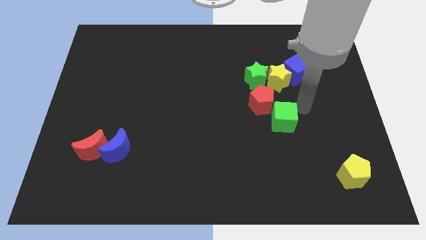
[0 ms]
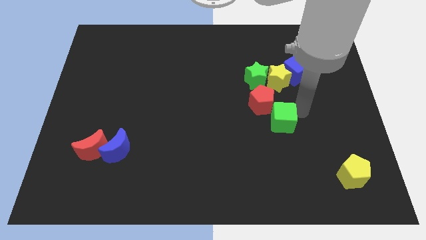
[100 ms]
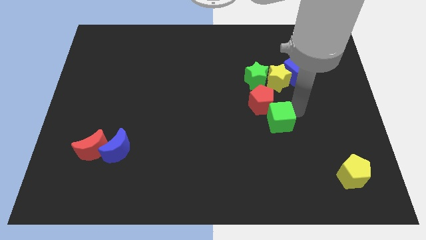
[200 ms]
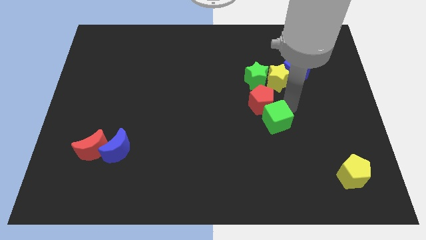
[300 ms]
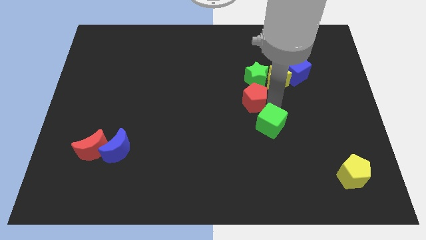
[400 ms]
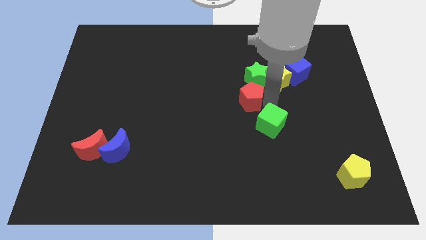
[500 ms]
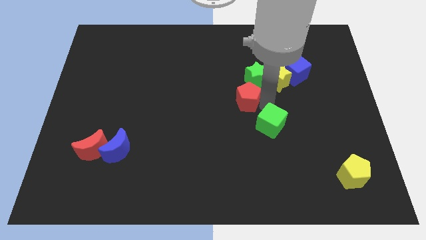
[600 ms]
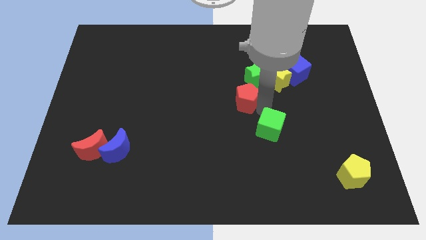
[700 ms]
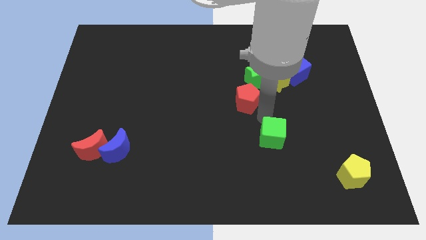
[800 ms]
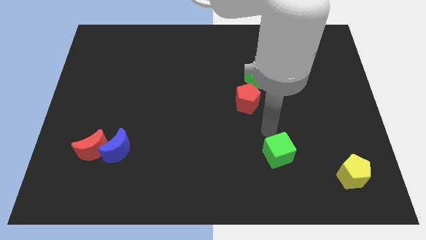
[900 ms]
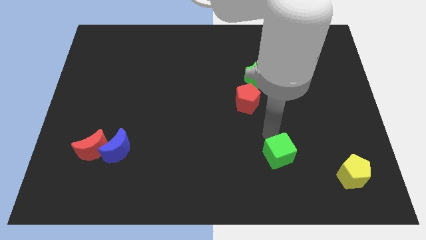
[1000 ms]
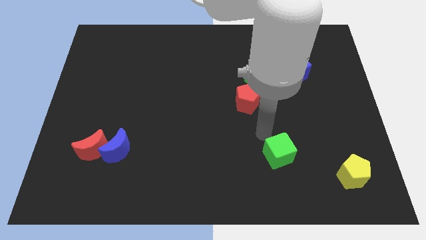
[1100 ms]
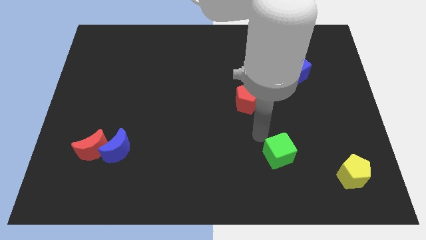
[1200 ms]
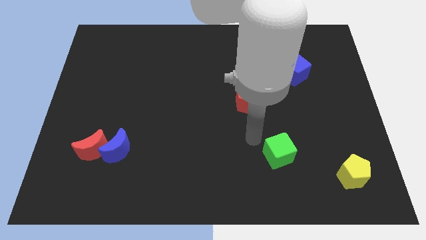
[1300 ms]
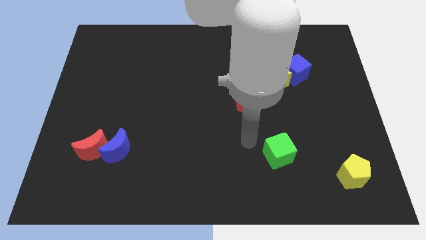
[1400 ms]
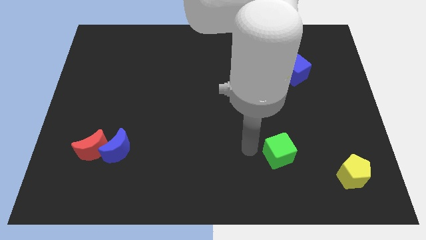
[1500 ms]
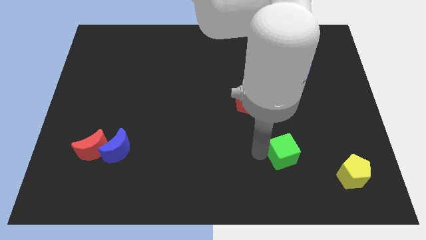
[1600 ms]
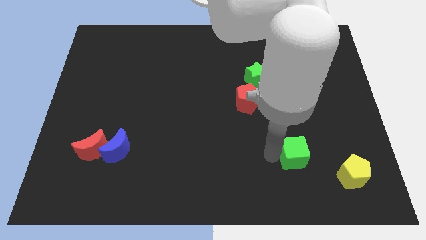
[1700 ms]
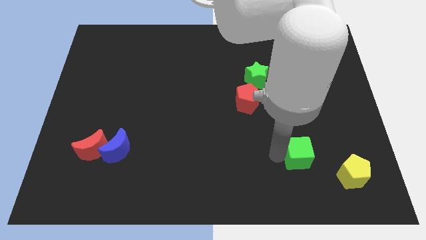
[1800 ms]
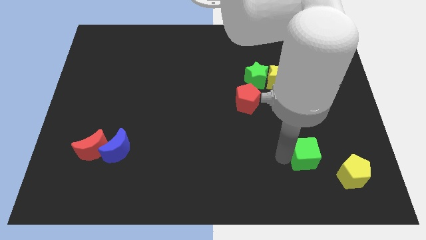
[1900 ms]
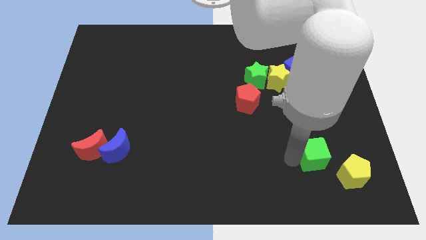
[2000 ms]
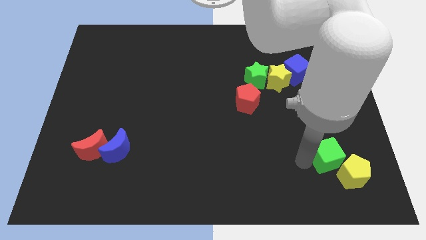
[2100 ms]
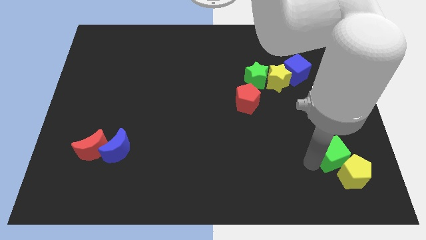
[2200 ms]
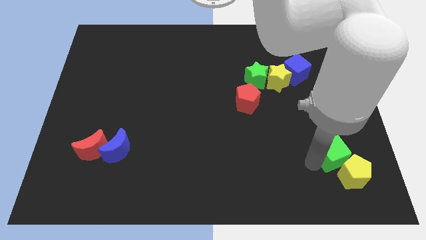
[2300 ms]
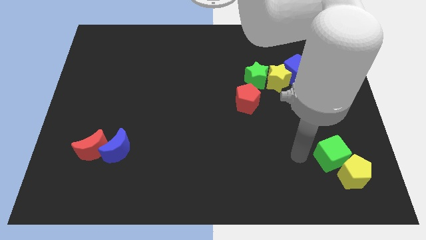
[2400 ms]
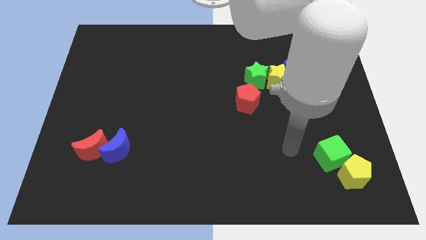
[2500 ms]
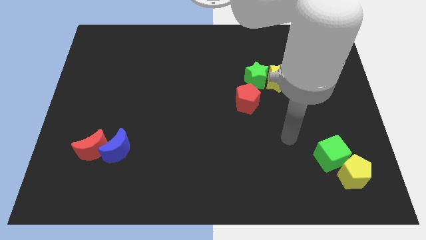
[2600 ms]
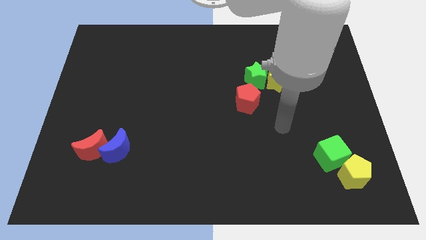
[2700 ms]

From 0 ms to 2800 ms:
separate the green cube with red pentagon

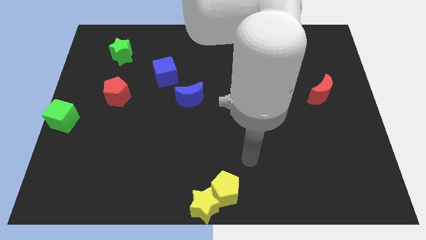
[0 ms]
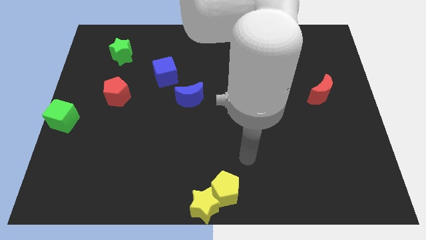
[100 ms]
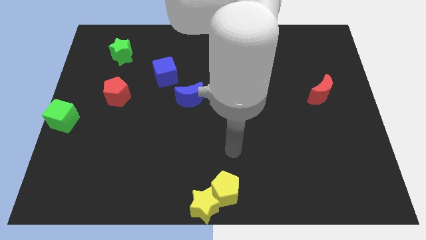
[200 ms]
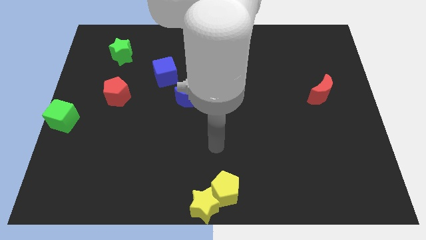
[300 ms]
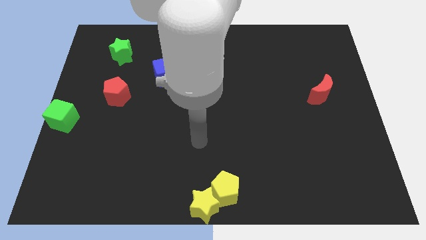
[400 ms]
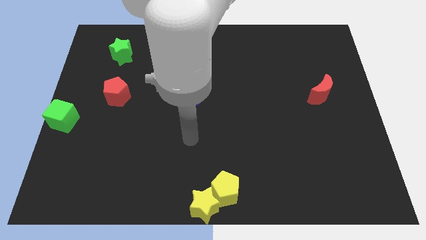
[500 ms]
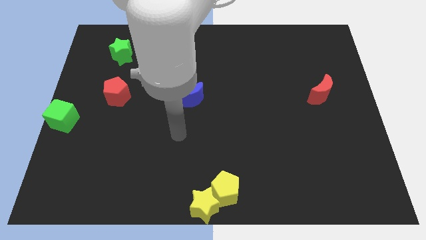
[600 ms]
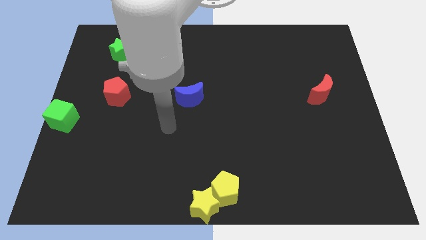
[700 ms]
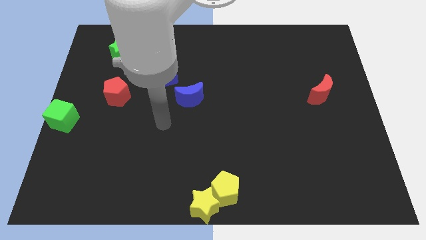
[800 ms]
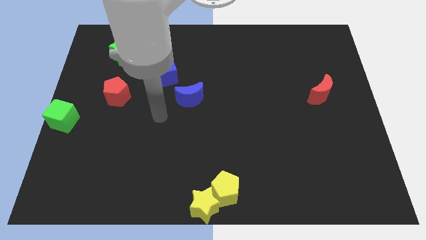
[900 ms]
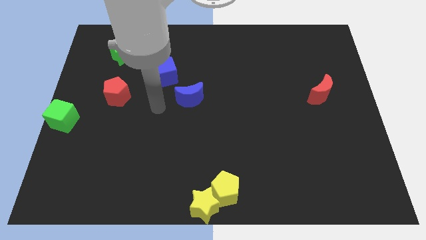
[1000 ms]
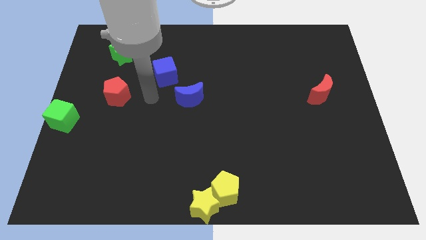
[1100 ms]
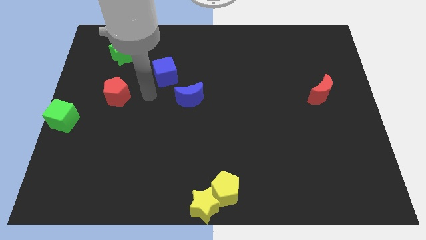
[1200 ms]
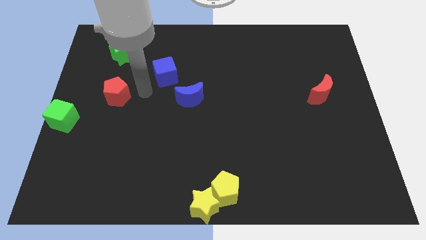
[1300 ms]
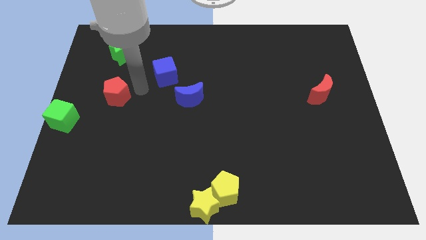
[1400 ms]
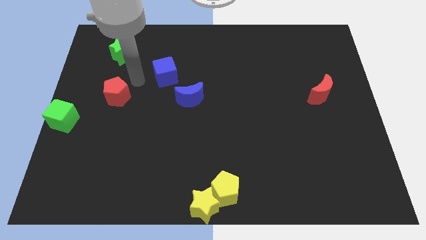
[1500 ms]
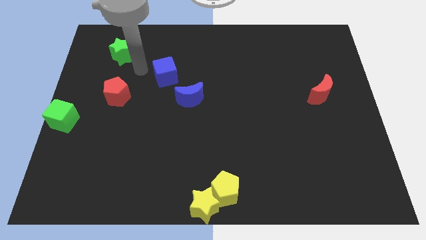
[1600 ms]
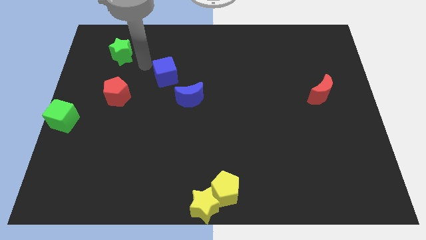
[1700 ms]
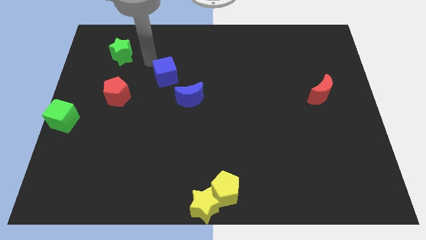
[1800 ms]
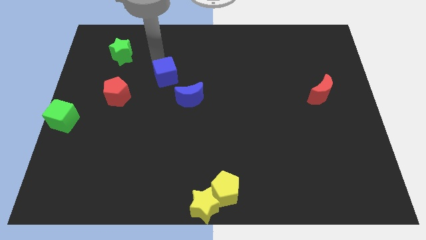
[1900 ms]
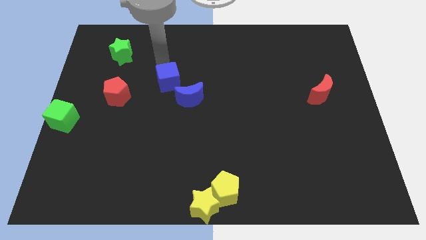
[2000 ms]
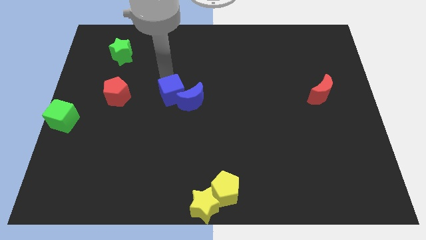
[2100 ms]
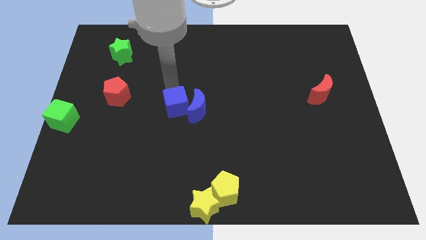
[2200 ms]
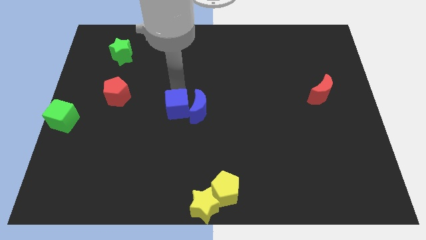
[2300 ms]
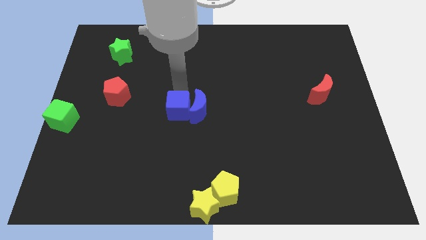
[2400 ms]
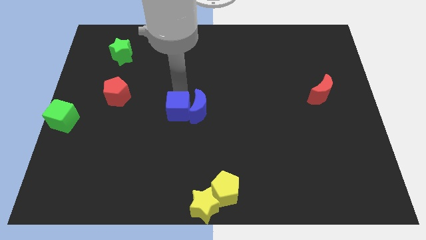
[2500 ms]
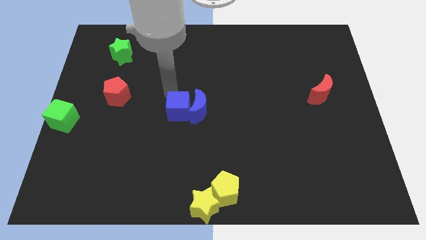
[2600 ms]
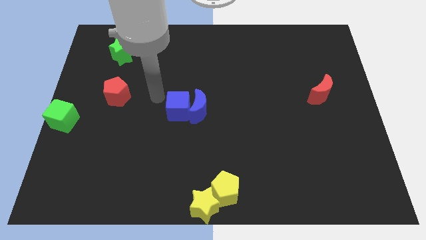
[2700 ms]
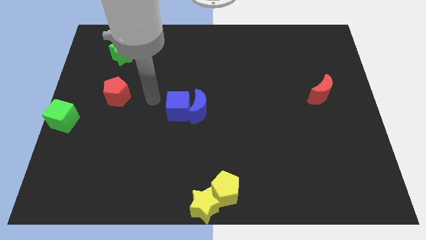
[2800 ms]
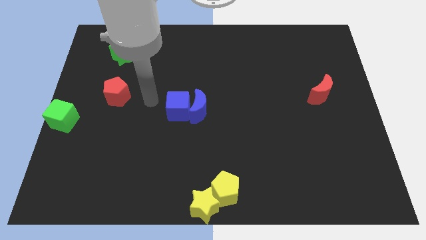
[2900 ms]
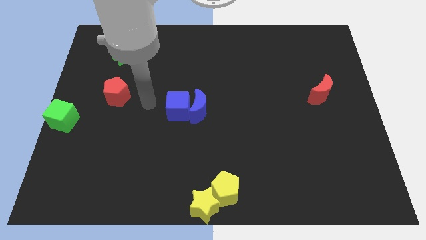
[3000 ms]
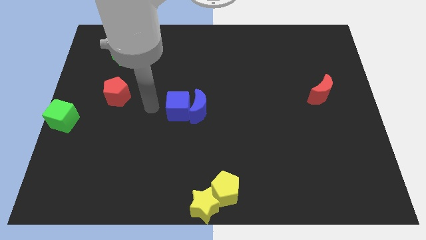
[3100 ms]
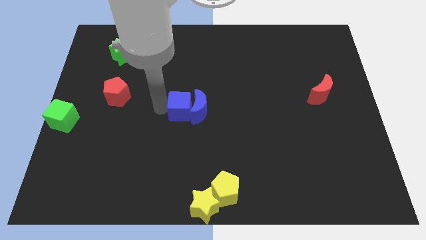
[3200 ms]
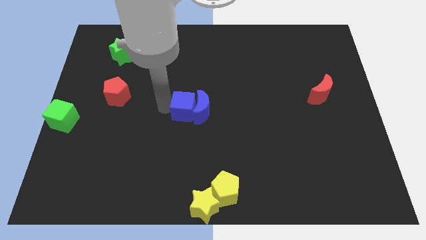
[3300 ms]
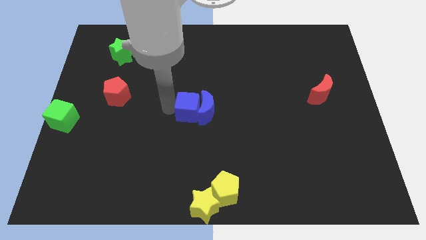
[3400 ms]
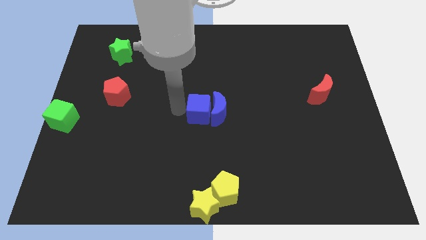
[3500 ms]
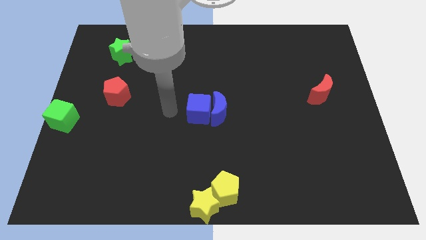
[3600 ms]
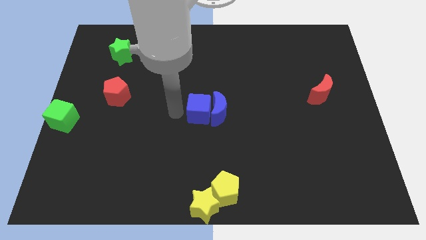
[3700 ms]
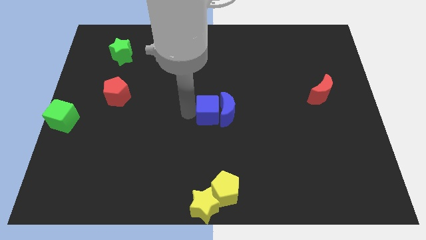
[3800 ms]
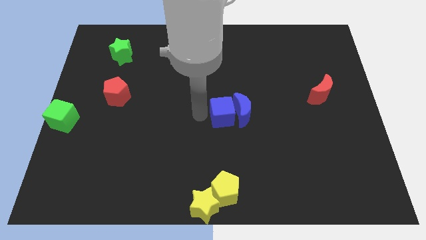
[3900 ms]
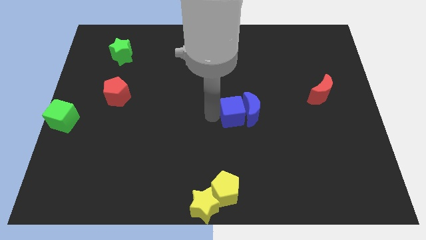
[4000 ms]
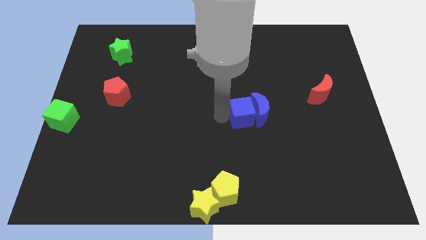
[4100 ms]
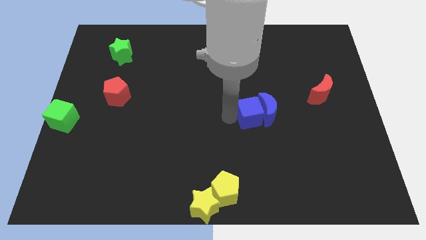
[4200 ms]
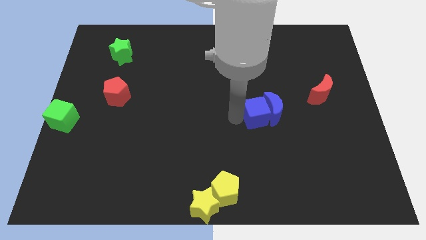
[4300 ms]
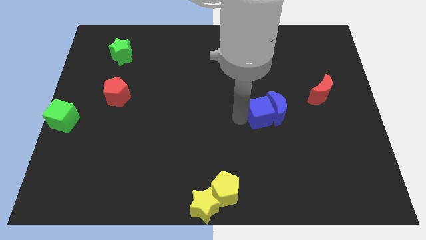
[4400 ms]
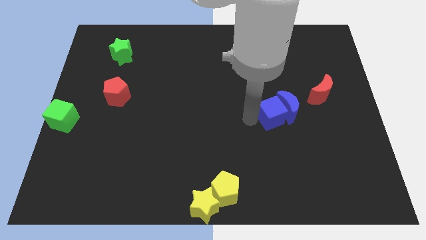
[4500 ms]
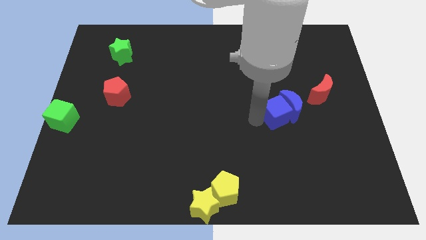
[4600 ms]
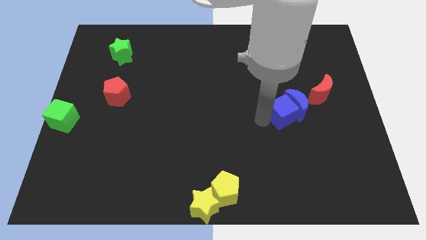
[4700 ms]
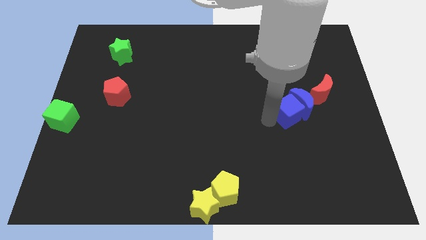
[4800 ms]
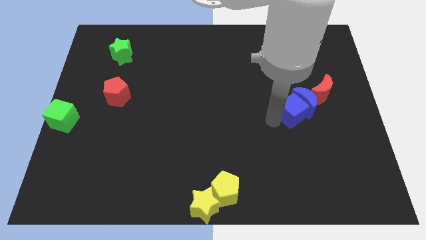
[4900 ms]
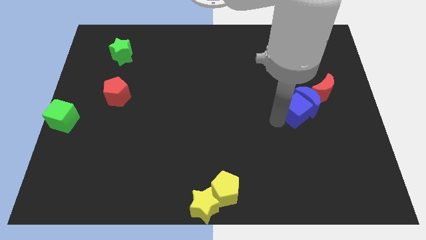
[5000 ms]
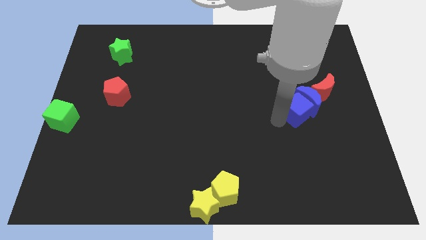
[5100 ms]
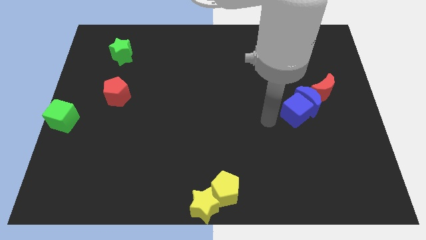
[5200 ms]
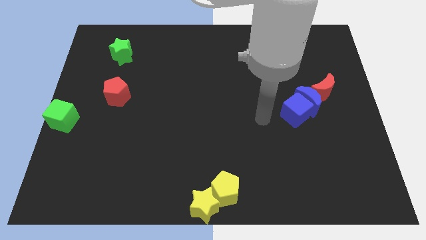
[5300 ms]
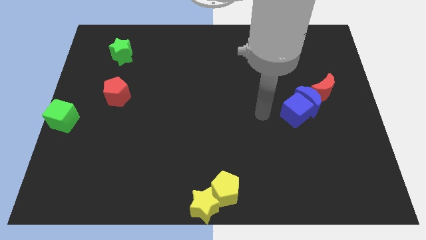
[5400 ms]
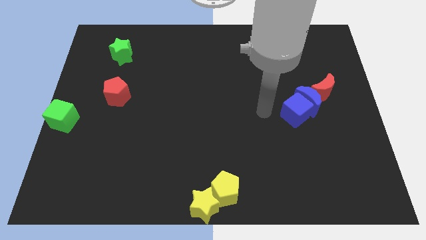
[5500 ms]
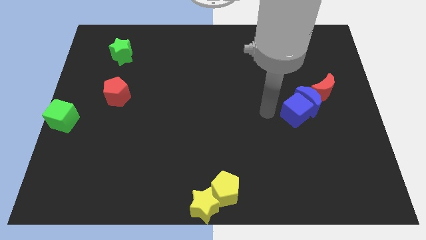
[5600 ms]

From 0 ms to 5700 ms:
move the blue blocks into the red crescent

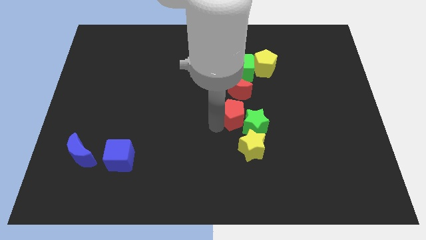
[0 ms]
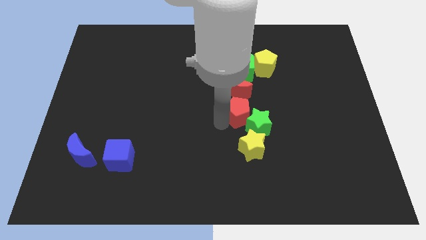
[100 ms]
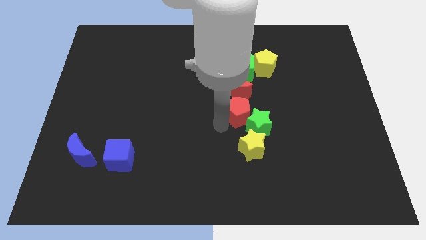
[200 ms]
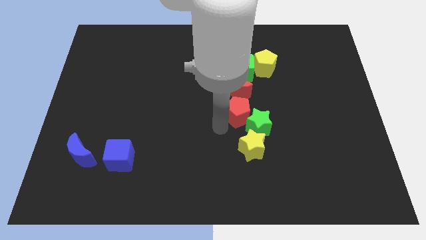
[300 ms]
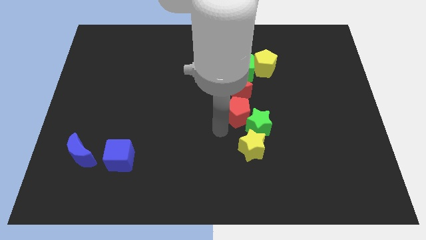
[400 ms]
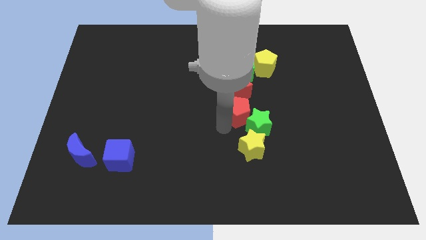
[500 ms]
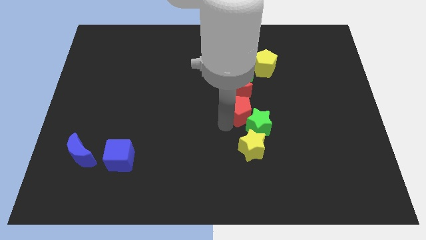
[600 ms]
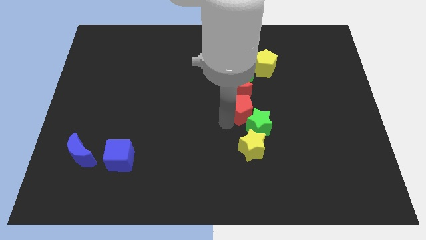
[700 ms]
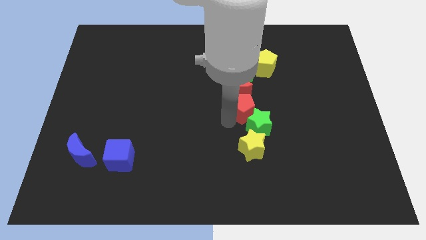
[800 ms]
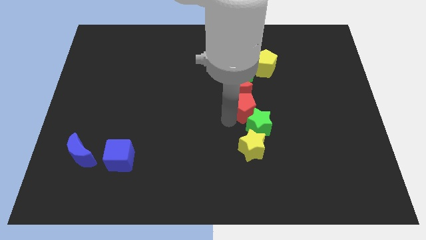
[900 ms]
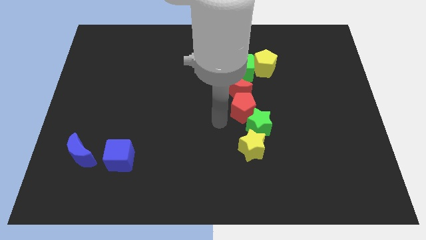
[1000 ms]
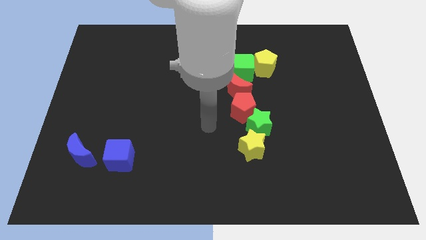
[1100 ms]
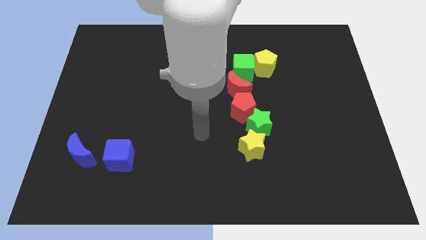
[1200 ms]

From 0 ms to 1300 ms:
place the red pentagon at the bottom of the red moon
